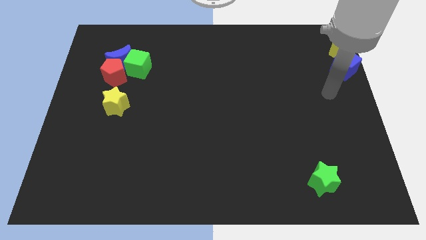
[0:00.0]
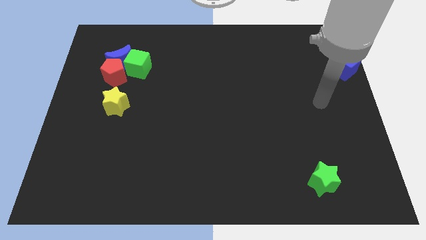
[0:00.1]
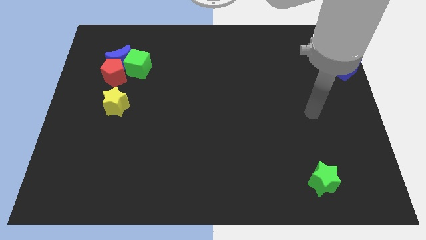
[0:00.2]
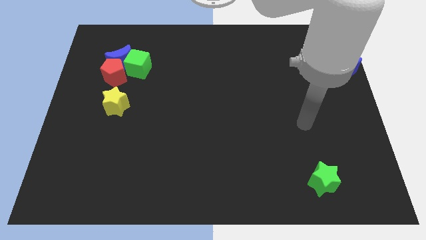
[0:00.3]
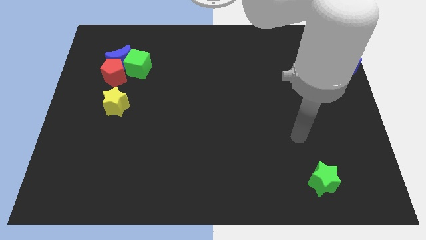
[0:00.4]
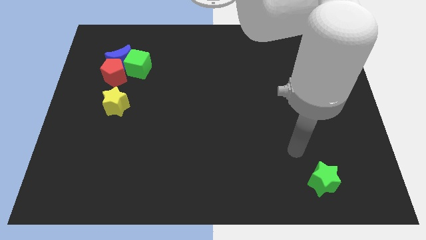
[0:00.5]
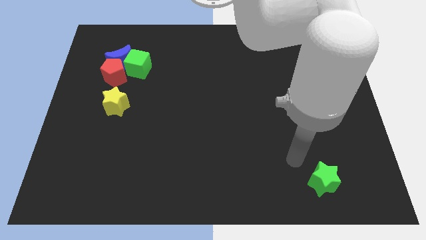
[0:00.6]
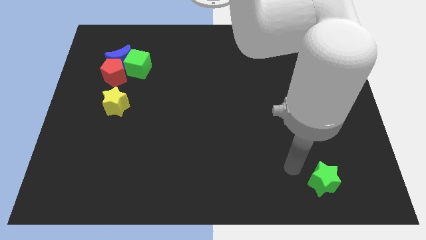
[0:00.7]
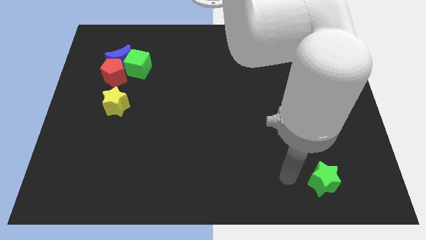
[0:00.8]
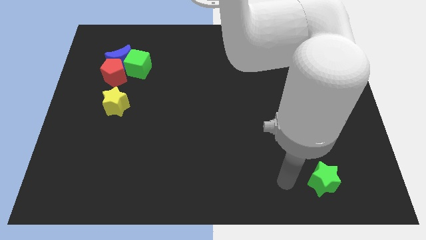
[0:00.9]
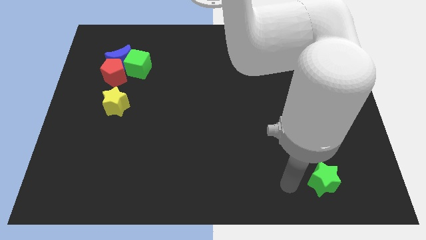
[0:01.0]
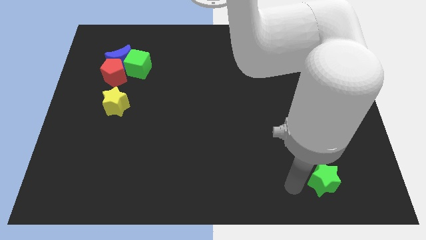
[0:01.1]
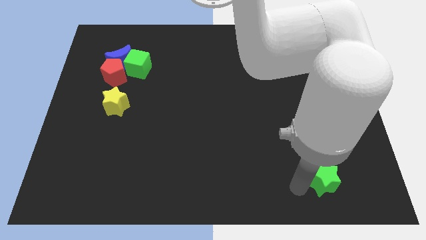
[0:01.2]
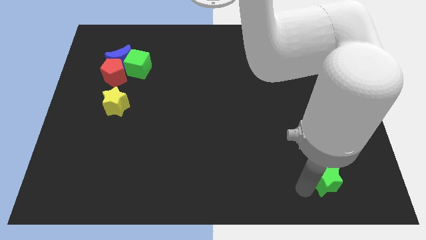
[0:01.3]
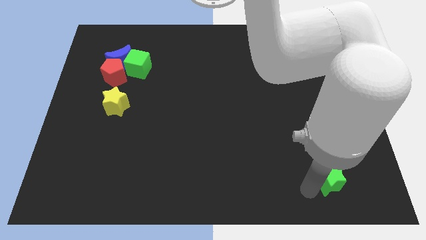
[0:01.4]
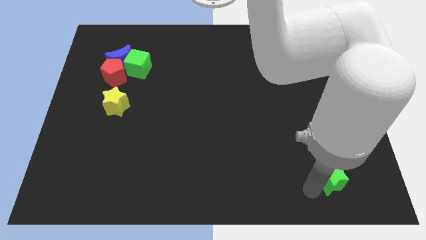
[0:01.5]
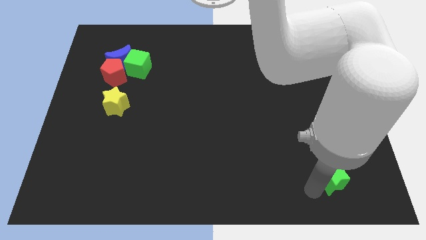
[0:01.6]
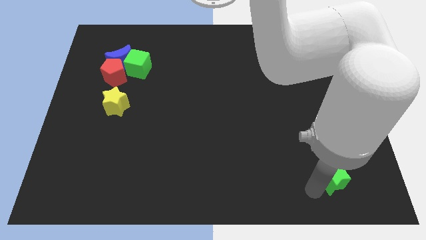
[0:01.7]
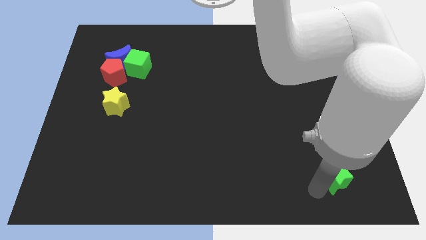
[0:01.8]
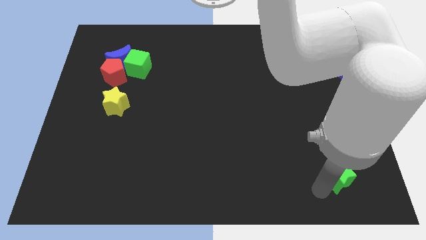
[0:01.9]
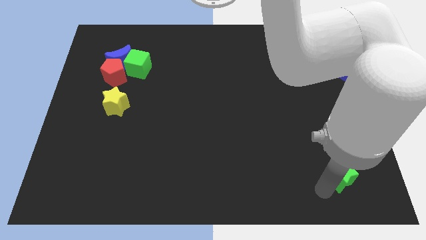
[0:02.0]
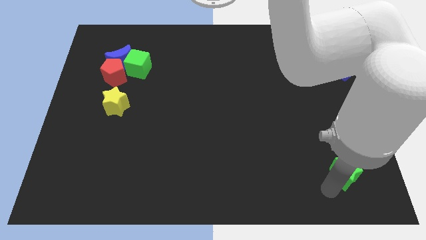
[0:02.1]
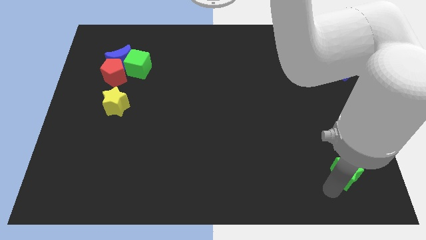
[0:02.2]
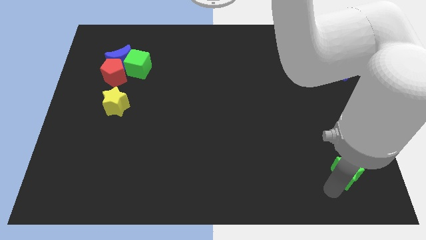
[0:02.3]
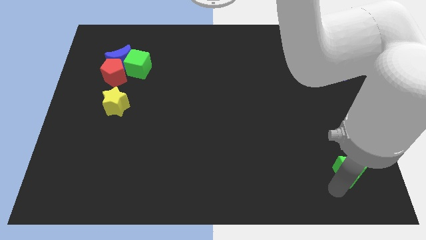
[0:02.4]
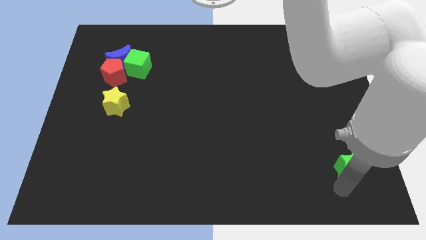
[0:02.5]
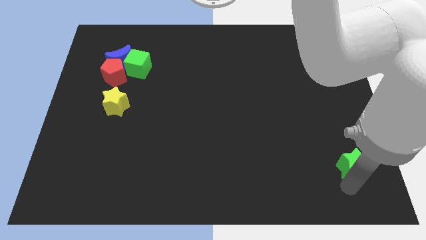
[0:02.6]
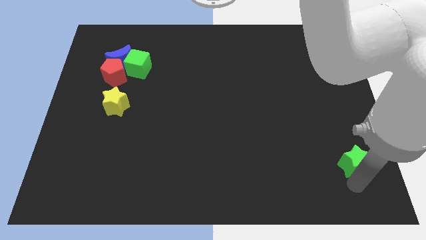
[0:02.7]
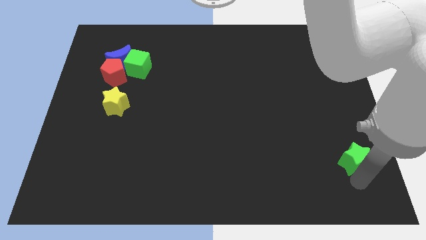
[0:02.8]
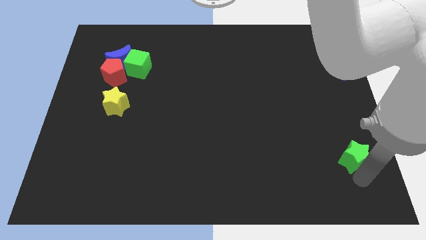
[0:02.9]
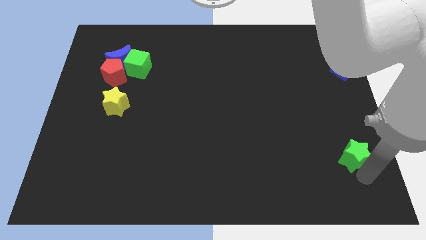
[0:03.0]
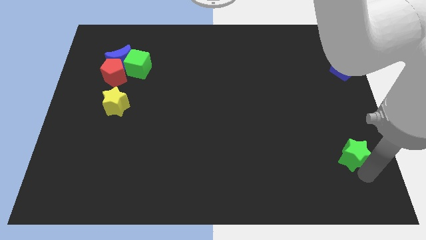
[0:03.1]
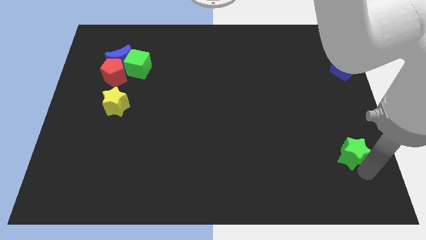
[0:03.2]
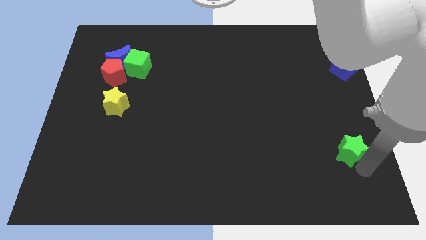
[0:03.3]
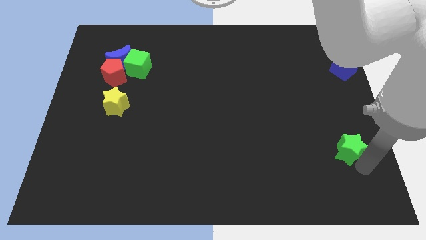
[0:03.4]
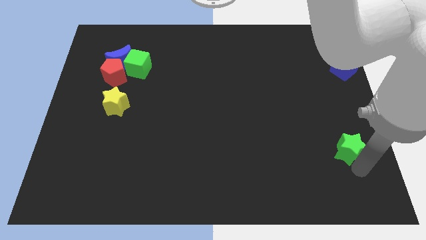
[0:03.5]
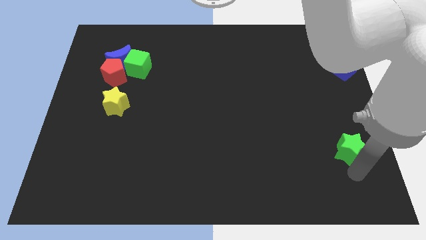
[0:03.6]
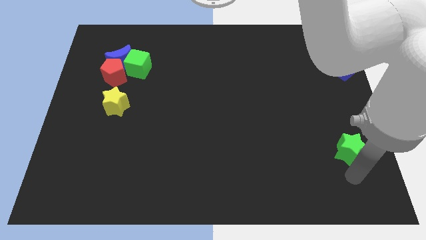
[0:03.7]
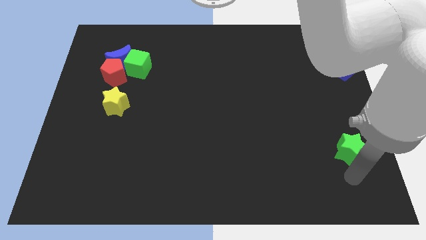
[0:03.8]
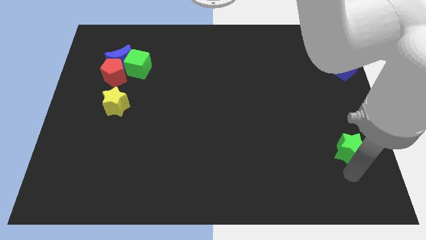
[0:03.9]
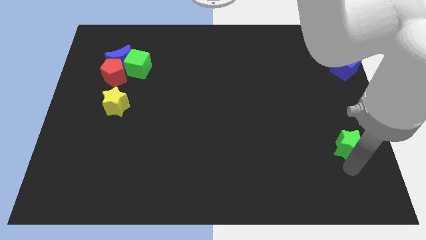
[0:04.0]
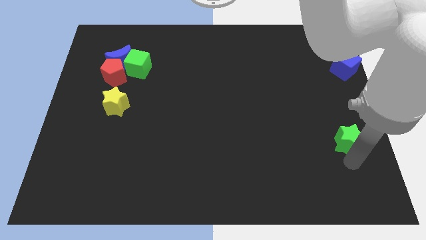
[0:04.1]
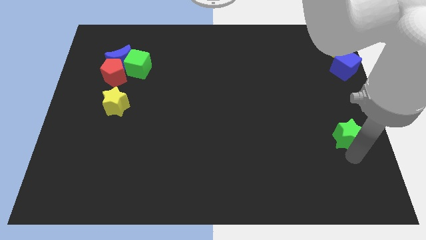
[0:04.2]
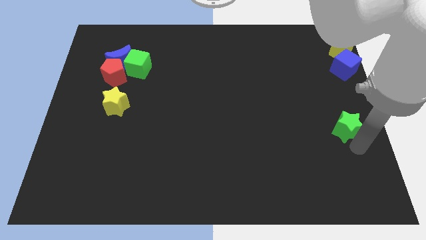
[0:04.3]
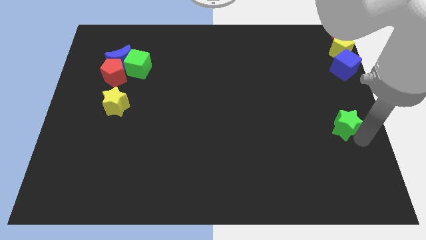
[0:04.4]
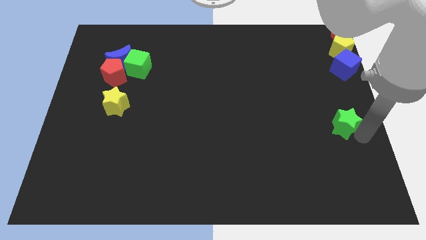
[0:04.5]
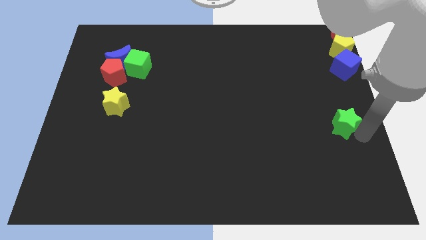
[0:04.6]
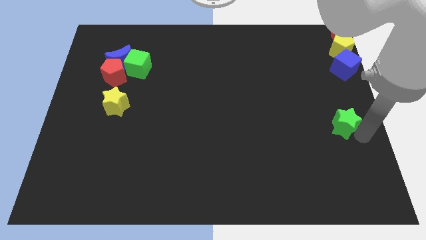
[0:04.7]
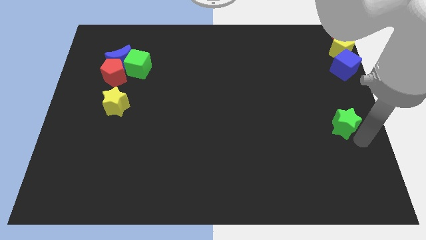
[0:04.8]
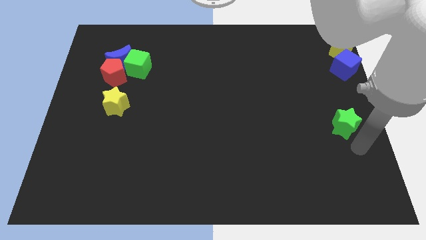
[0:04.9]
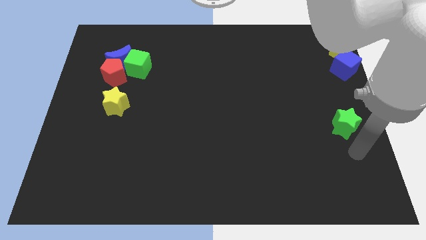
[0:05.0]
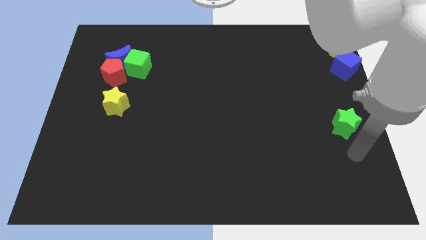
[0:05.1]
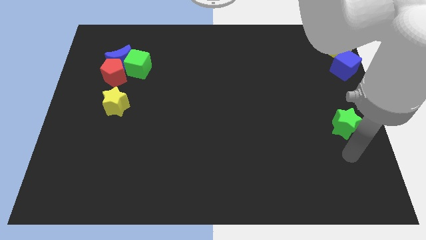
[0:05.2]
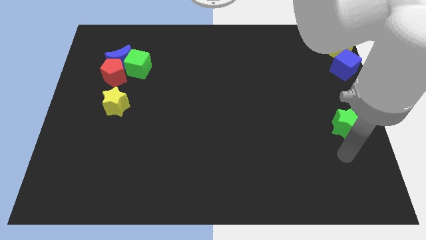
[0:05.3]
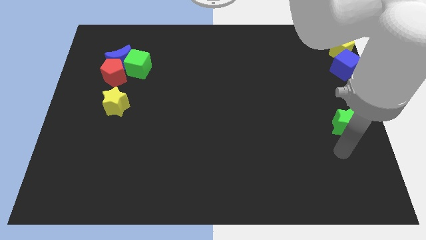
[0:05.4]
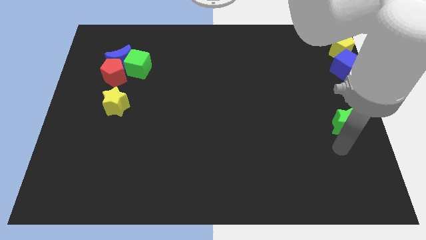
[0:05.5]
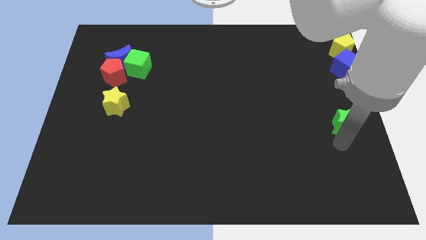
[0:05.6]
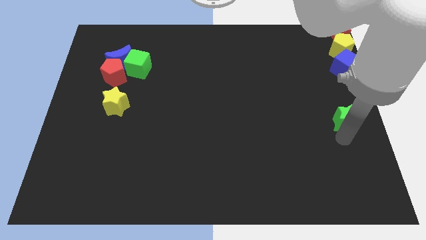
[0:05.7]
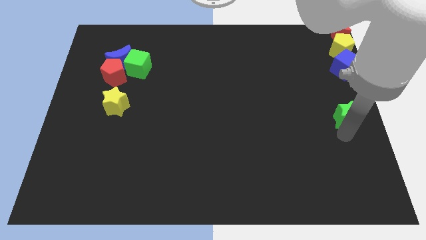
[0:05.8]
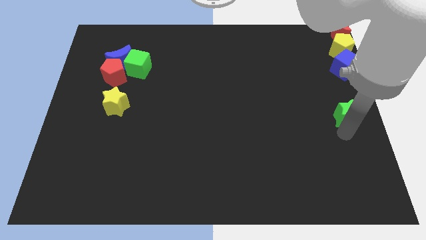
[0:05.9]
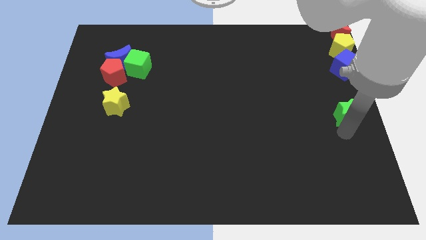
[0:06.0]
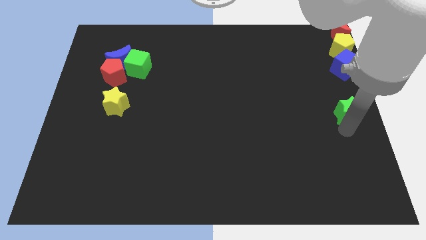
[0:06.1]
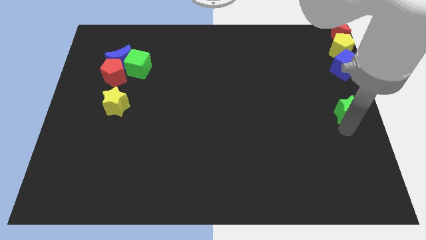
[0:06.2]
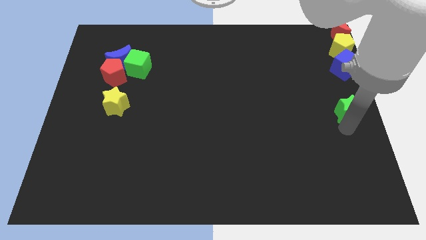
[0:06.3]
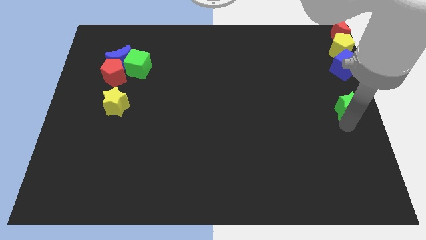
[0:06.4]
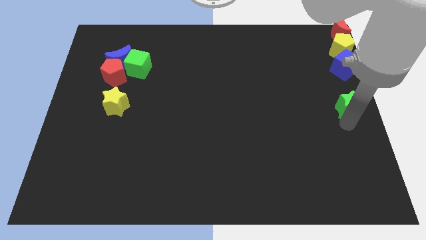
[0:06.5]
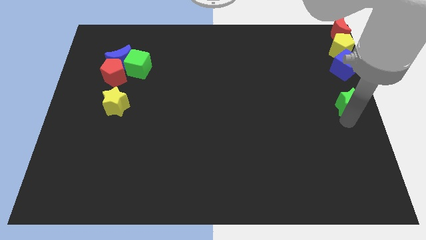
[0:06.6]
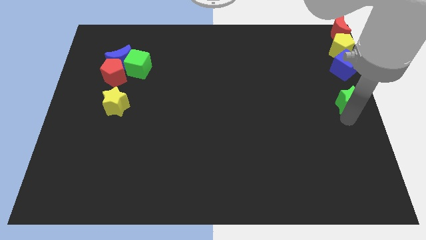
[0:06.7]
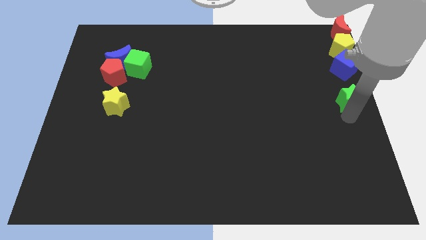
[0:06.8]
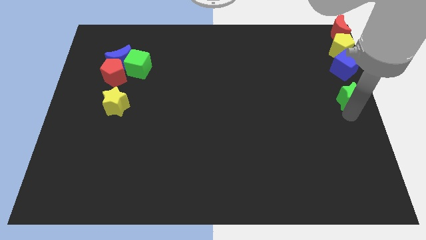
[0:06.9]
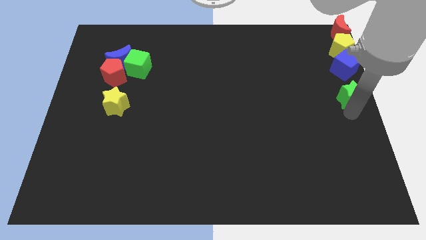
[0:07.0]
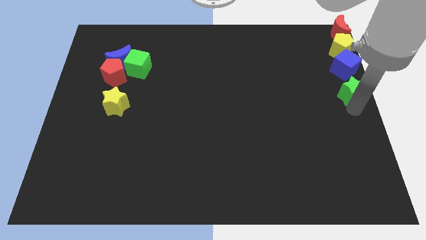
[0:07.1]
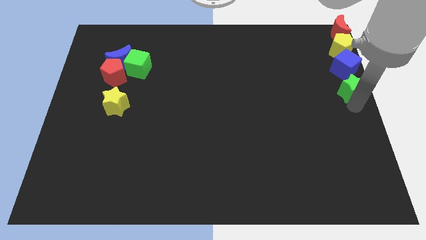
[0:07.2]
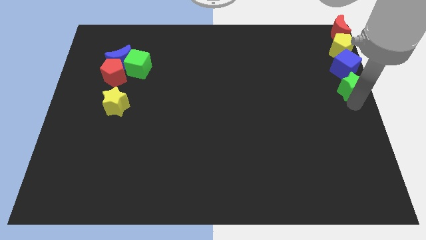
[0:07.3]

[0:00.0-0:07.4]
add the green star to the vertical line of the group of blocks

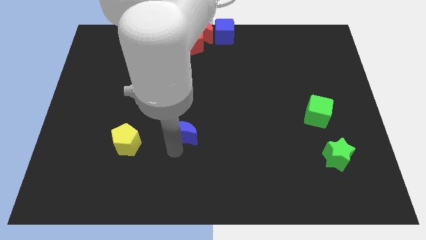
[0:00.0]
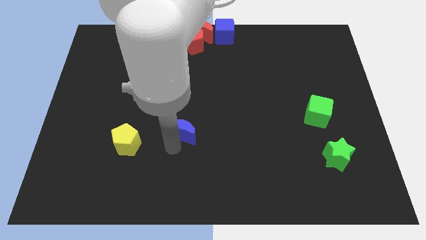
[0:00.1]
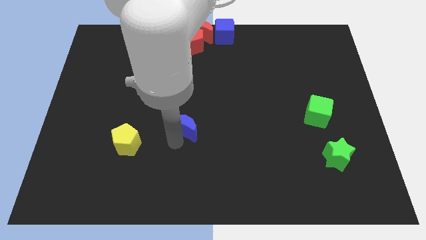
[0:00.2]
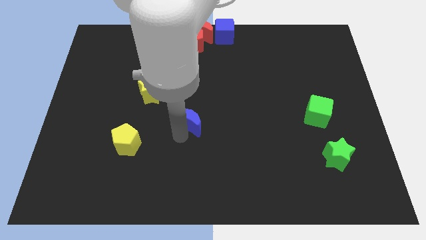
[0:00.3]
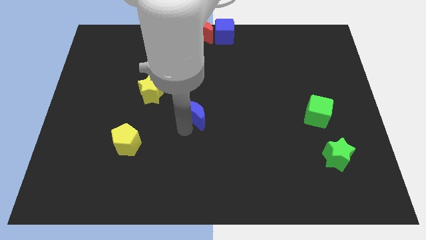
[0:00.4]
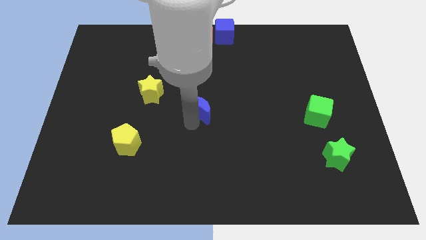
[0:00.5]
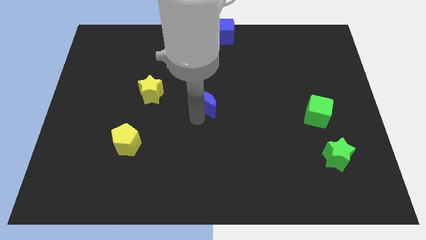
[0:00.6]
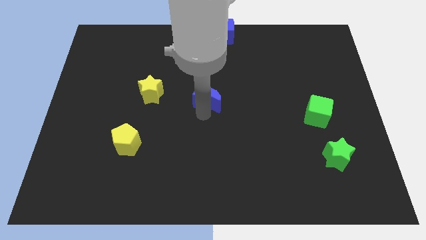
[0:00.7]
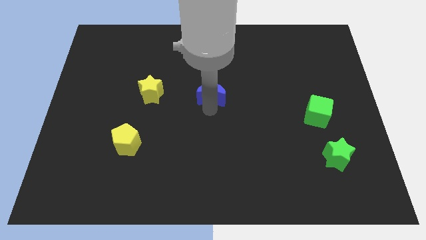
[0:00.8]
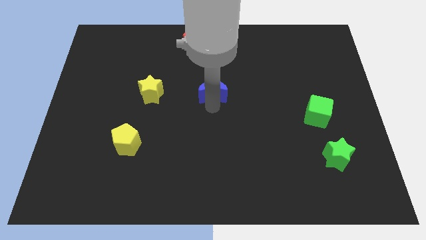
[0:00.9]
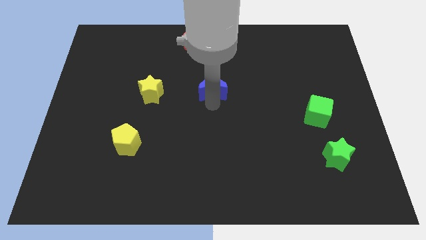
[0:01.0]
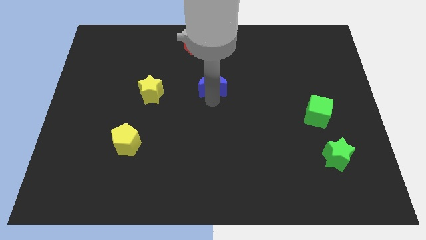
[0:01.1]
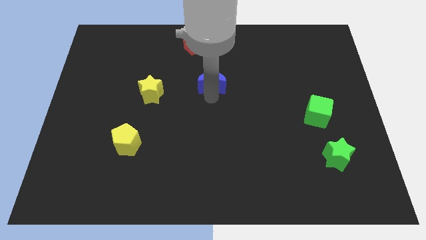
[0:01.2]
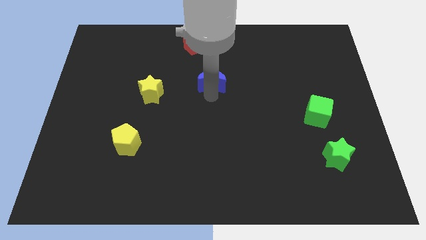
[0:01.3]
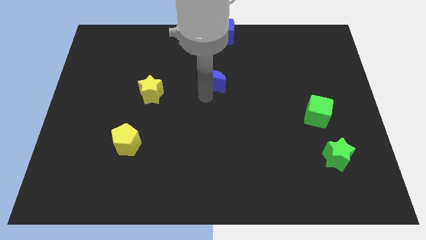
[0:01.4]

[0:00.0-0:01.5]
push the blue crescent to the centre of the board

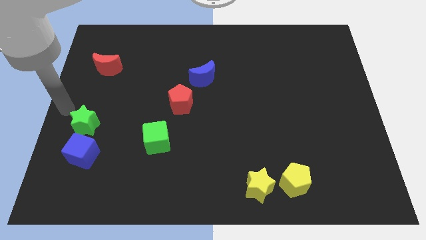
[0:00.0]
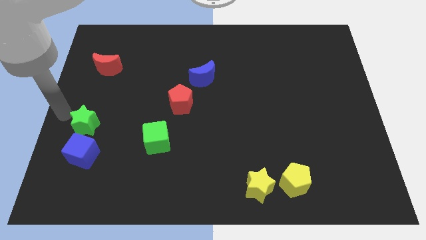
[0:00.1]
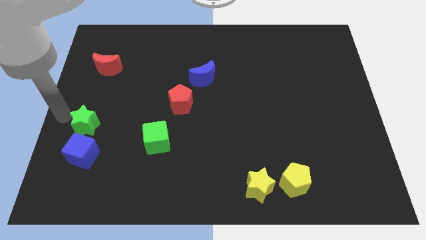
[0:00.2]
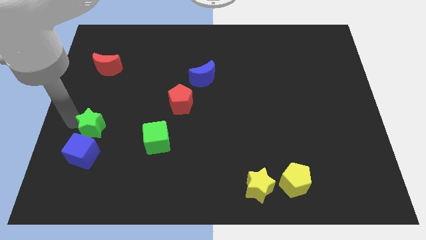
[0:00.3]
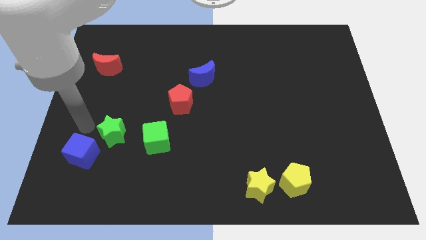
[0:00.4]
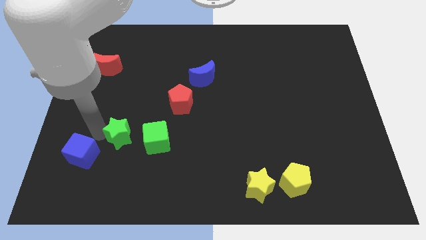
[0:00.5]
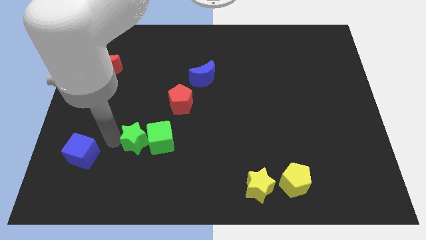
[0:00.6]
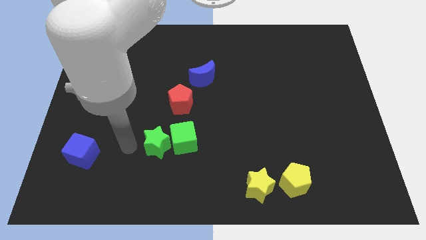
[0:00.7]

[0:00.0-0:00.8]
move green star into the green cube
